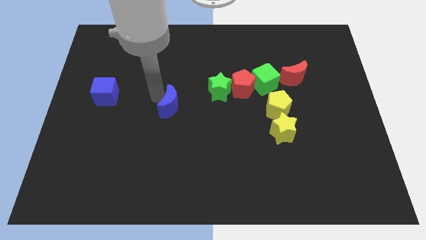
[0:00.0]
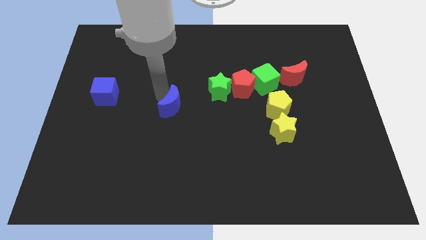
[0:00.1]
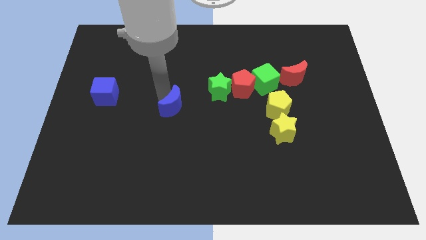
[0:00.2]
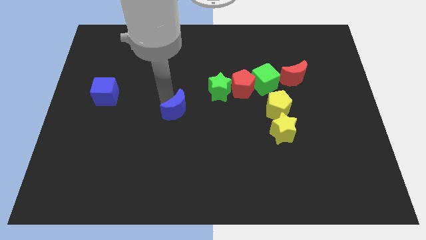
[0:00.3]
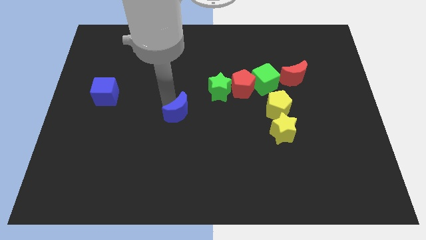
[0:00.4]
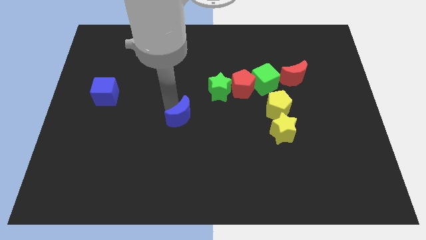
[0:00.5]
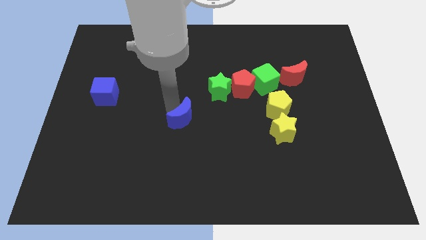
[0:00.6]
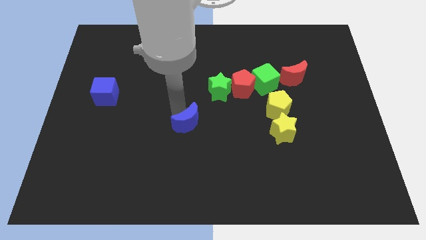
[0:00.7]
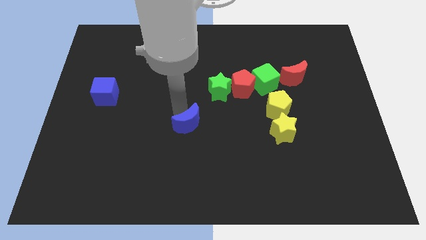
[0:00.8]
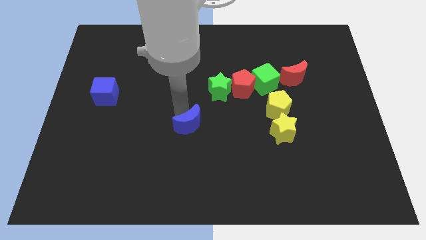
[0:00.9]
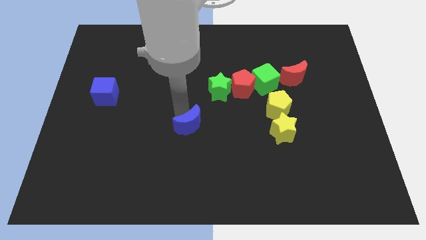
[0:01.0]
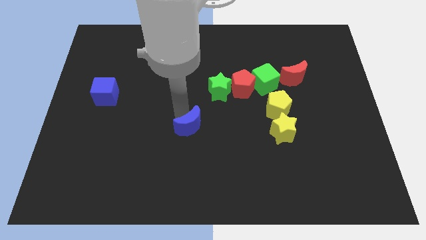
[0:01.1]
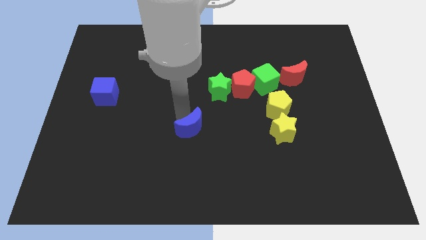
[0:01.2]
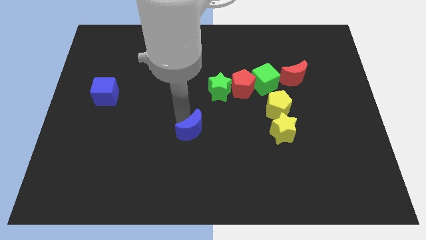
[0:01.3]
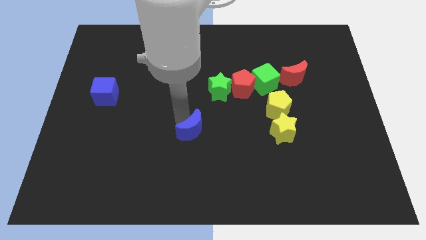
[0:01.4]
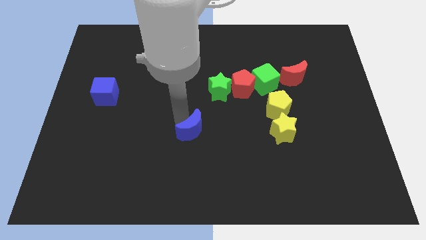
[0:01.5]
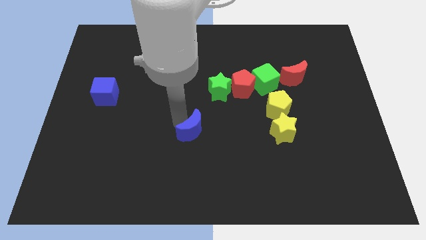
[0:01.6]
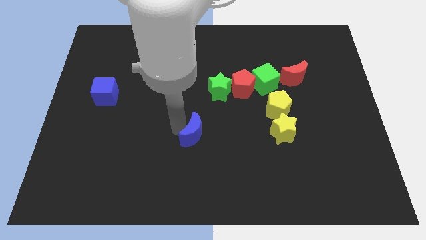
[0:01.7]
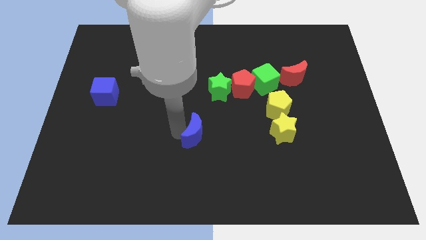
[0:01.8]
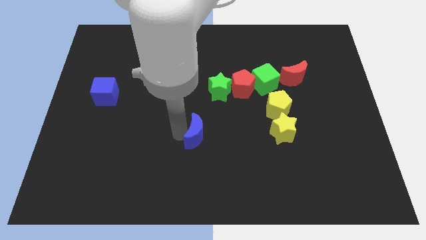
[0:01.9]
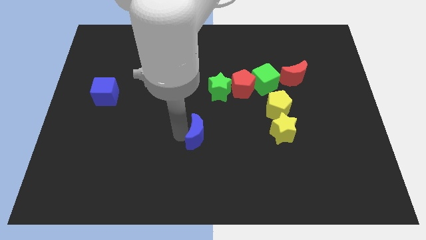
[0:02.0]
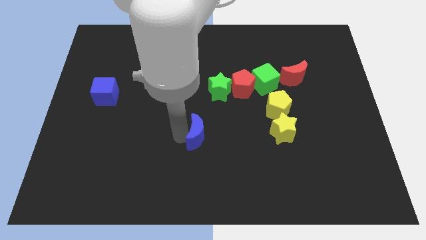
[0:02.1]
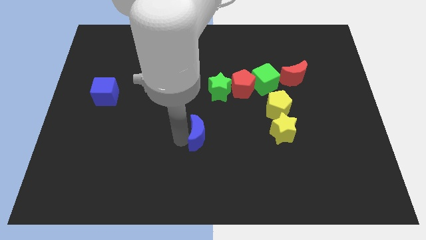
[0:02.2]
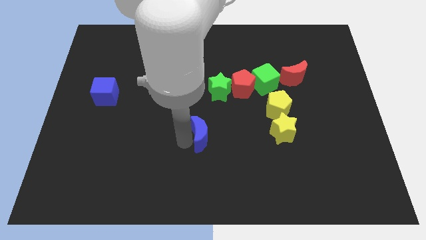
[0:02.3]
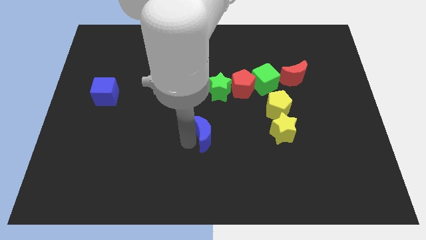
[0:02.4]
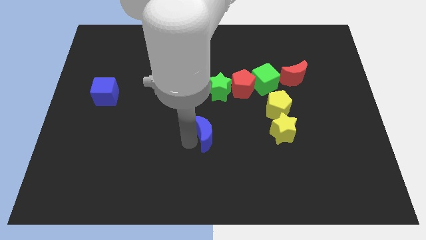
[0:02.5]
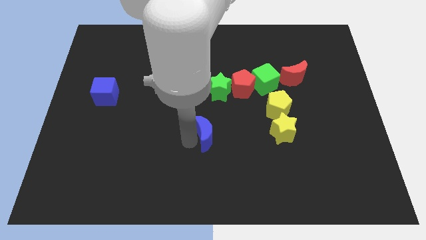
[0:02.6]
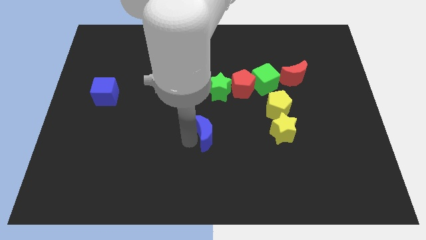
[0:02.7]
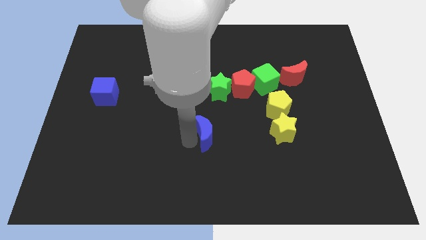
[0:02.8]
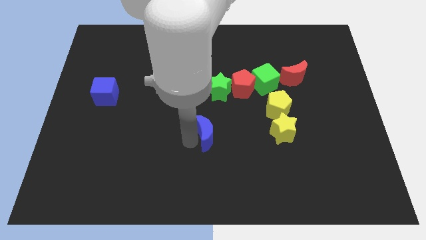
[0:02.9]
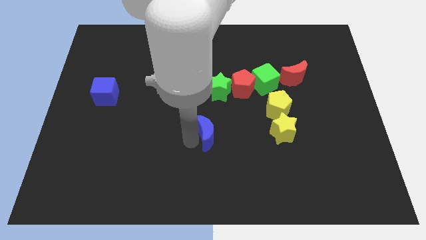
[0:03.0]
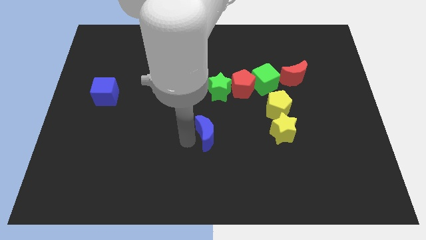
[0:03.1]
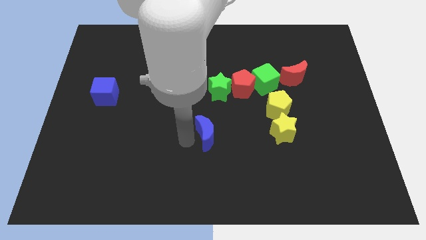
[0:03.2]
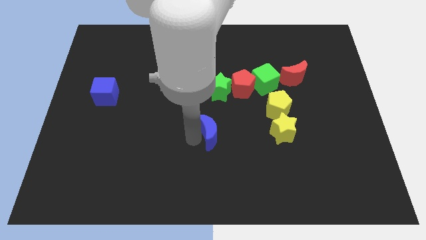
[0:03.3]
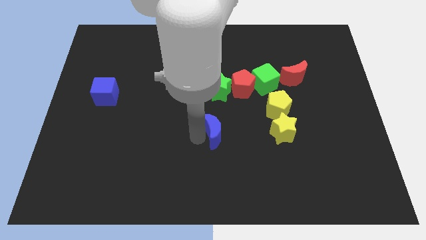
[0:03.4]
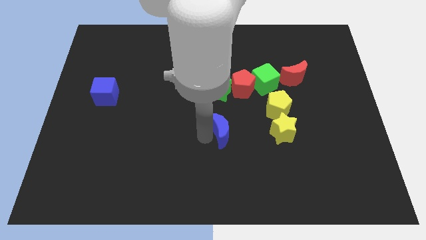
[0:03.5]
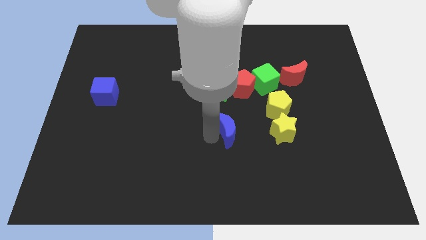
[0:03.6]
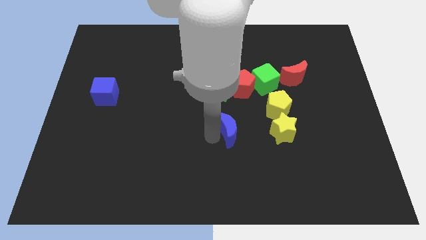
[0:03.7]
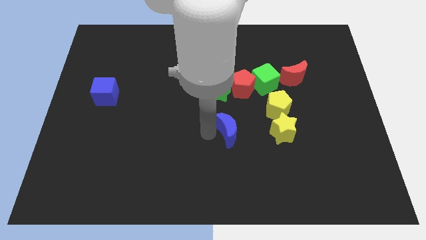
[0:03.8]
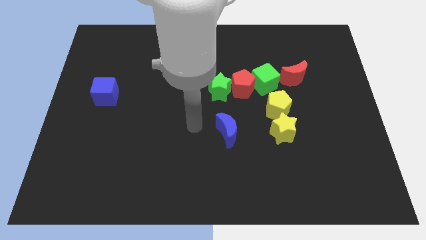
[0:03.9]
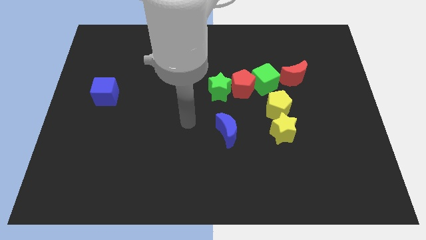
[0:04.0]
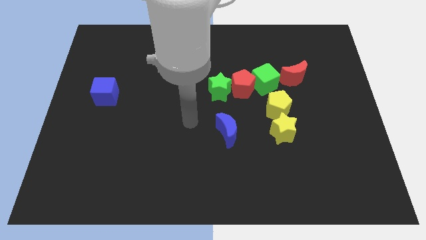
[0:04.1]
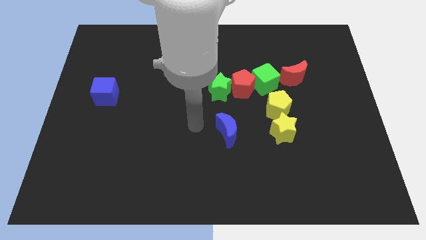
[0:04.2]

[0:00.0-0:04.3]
push the blue crescent towards the yellow star

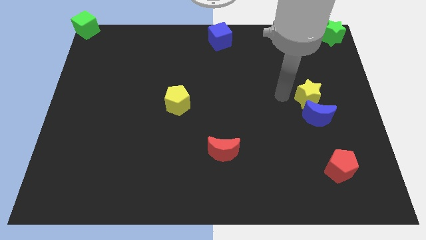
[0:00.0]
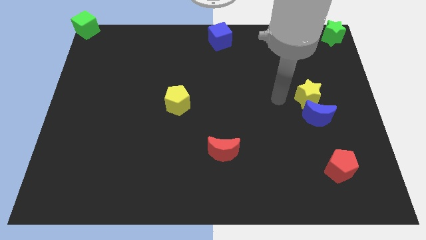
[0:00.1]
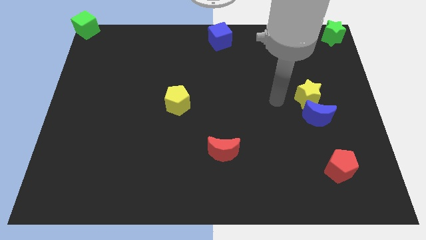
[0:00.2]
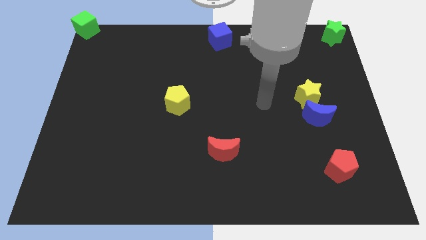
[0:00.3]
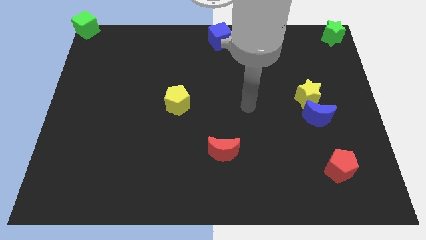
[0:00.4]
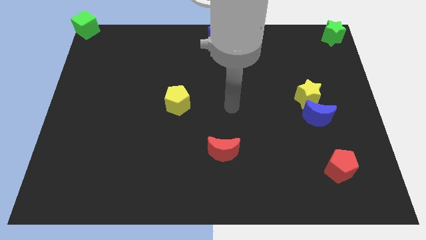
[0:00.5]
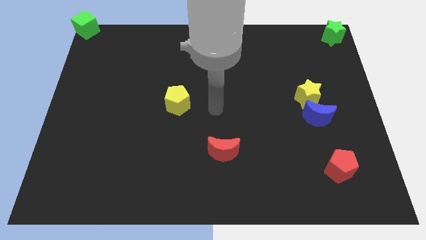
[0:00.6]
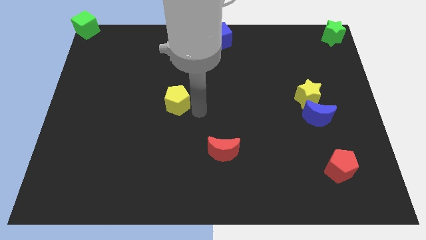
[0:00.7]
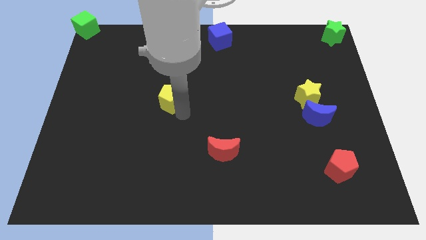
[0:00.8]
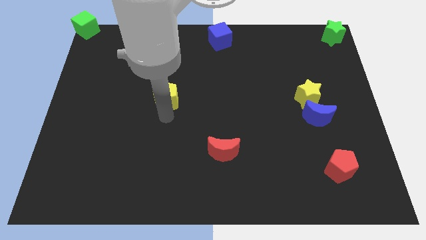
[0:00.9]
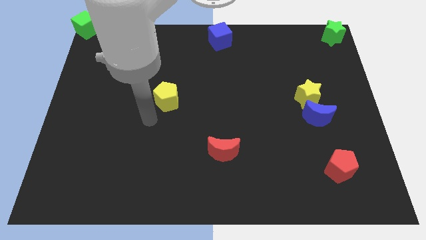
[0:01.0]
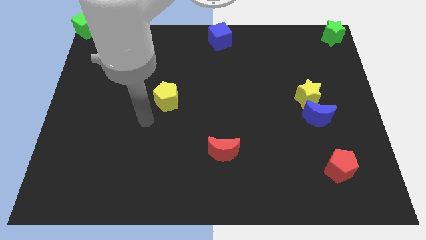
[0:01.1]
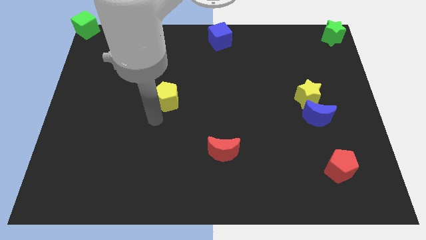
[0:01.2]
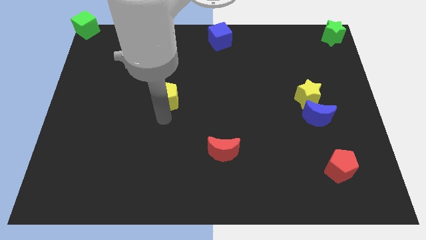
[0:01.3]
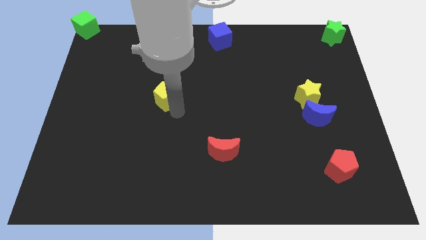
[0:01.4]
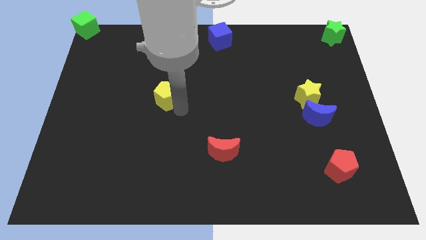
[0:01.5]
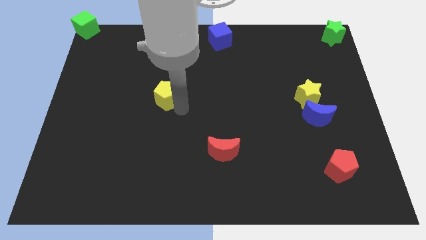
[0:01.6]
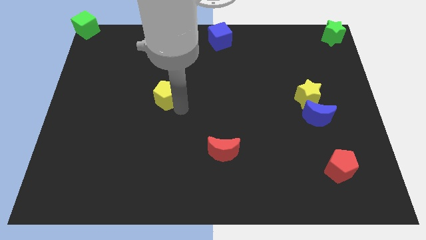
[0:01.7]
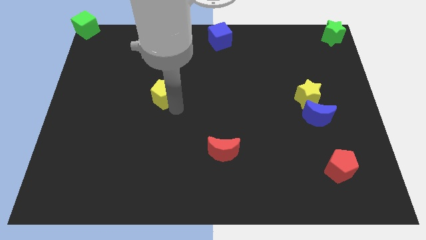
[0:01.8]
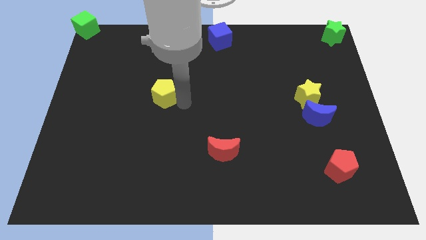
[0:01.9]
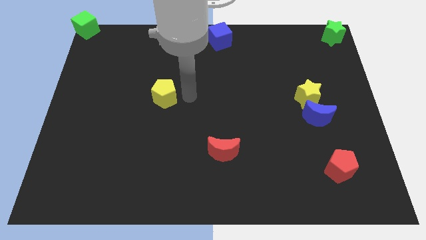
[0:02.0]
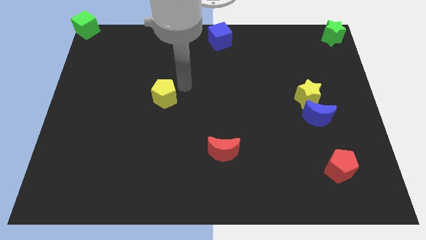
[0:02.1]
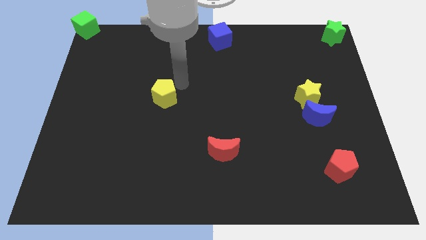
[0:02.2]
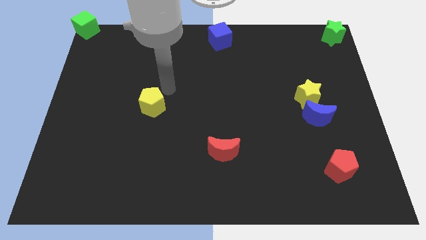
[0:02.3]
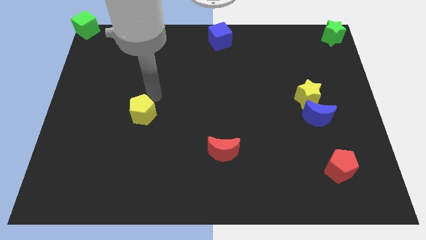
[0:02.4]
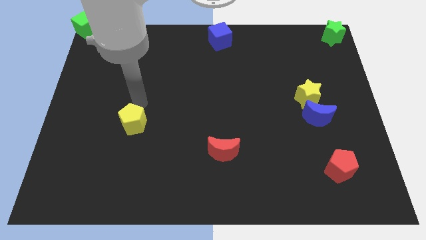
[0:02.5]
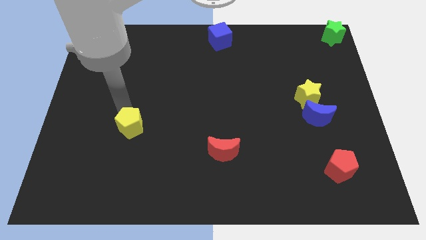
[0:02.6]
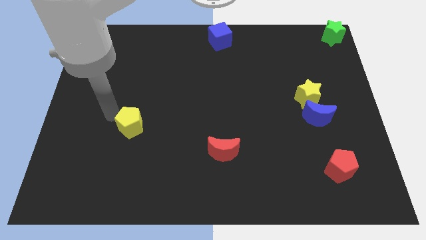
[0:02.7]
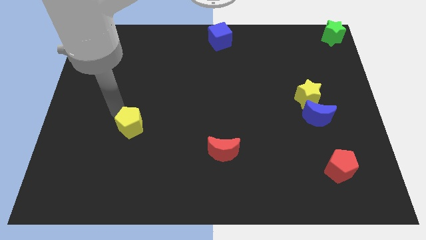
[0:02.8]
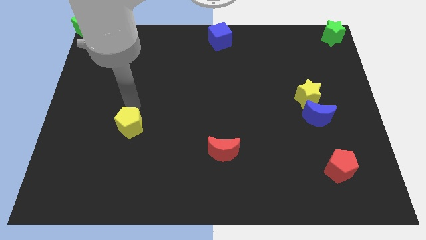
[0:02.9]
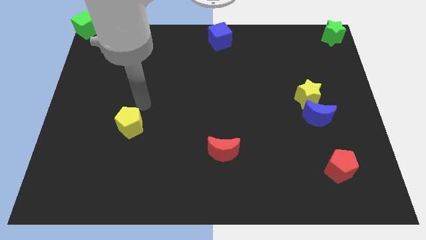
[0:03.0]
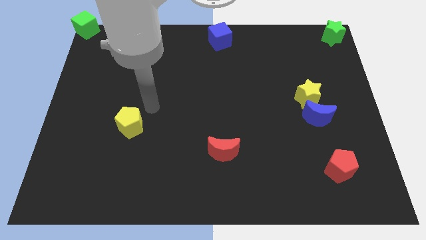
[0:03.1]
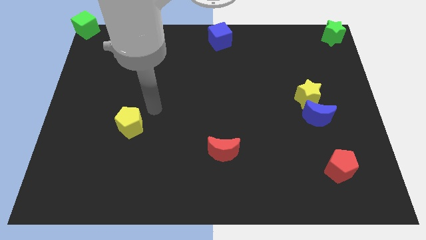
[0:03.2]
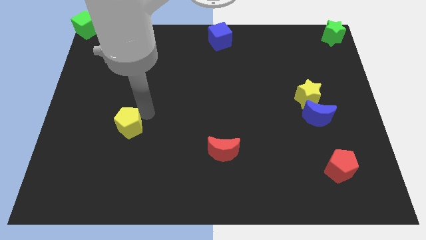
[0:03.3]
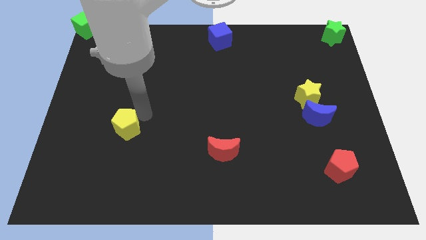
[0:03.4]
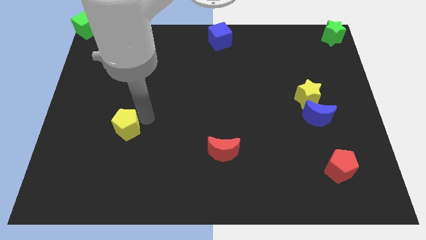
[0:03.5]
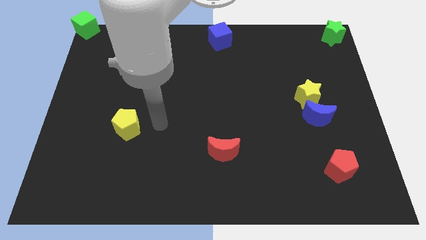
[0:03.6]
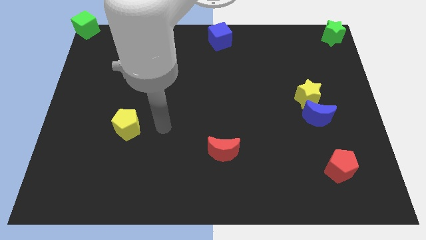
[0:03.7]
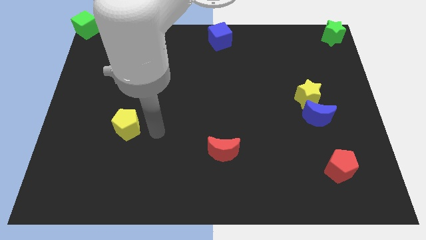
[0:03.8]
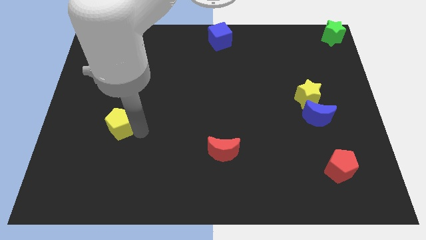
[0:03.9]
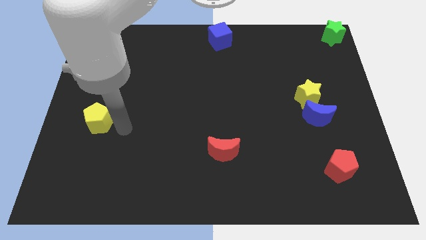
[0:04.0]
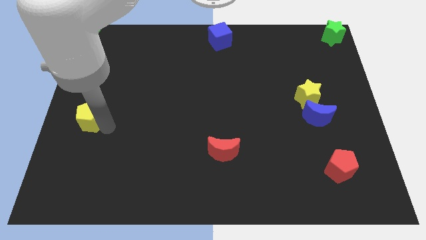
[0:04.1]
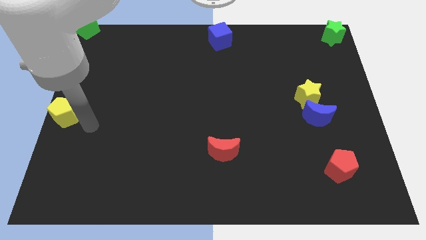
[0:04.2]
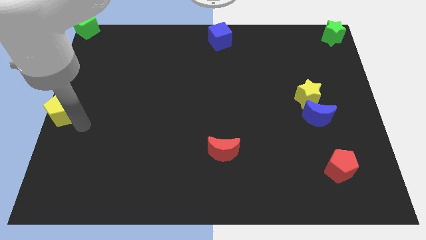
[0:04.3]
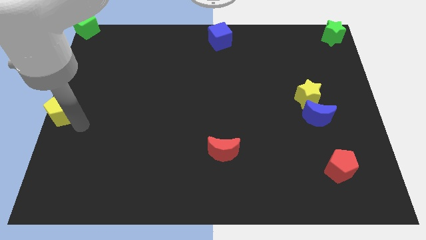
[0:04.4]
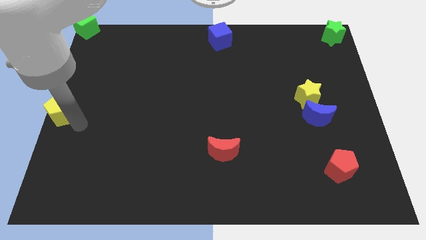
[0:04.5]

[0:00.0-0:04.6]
place the yellow pentagon to the center left
